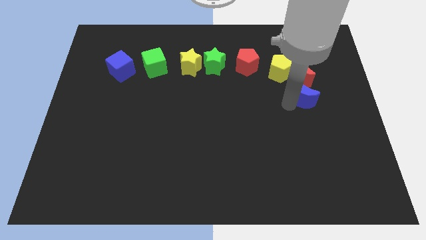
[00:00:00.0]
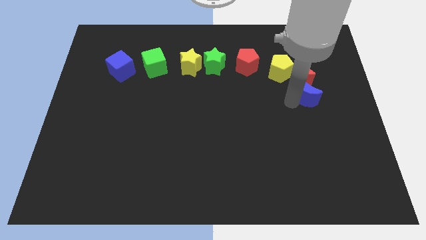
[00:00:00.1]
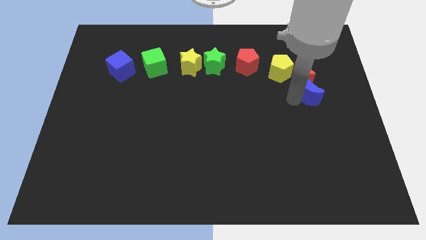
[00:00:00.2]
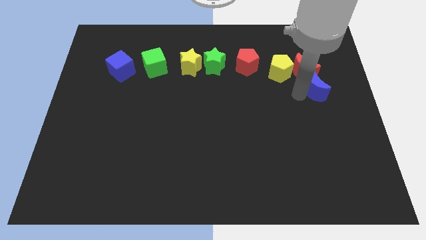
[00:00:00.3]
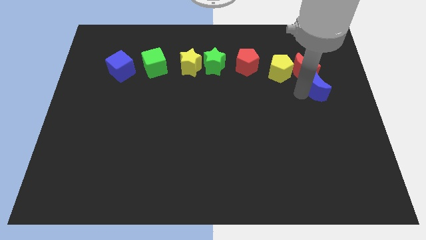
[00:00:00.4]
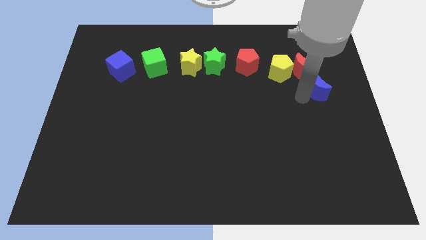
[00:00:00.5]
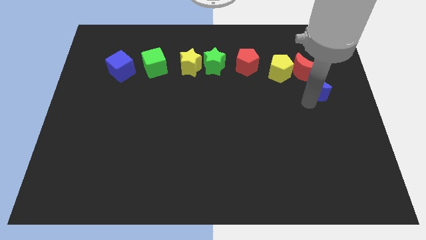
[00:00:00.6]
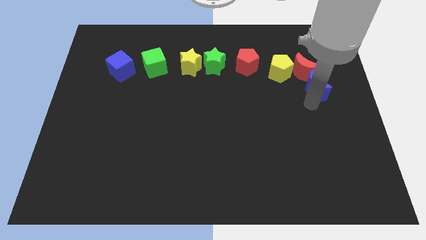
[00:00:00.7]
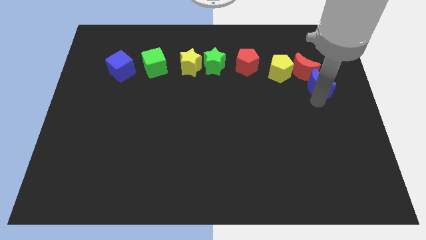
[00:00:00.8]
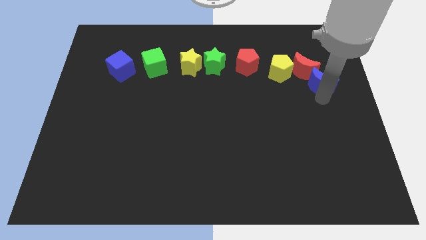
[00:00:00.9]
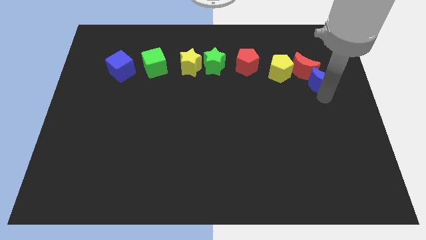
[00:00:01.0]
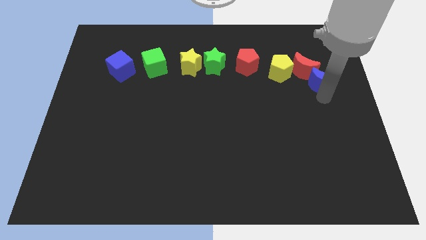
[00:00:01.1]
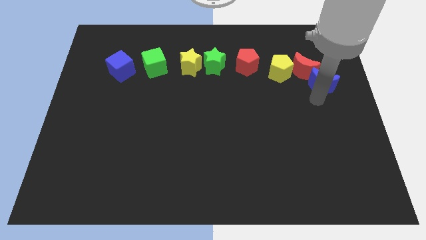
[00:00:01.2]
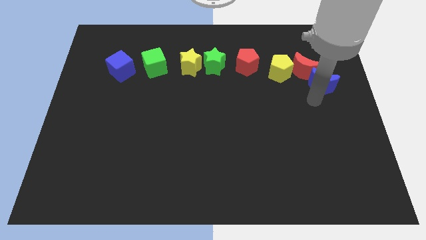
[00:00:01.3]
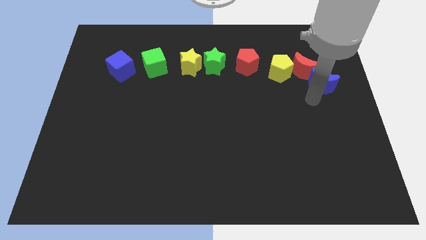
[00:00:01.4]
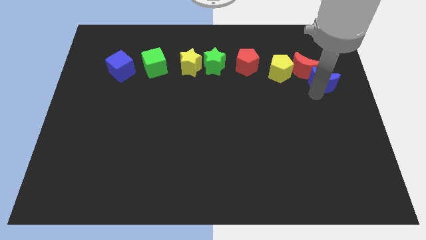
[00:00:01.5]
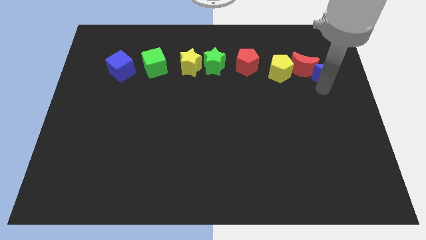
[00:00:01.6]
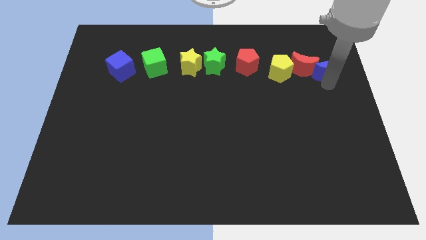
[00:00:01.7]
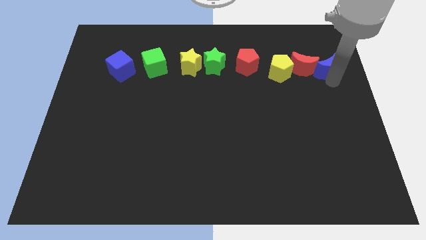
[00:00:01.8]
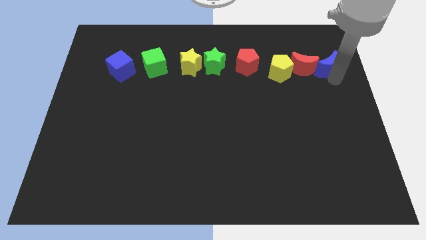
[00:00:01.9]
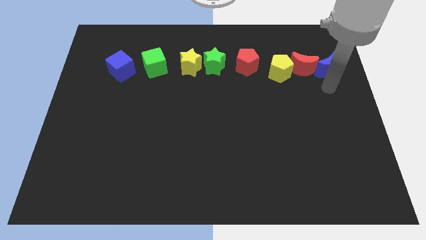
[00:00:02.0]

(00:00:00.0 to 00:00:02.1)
push the blue crescent to the right of red crescent

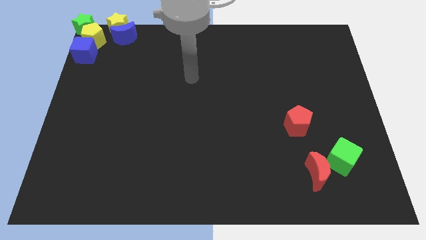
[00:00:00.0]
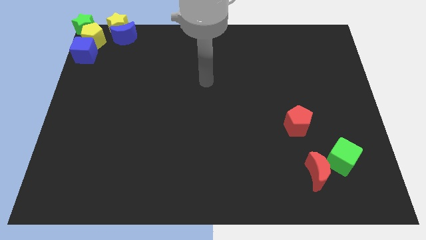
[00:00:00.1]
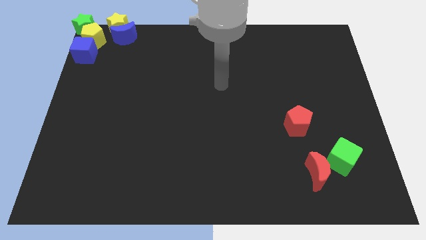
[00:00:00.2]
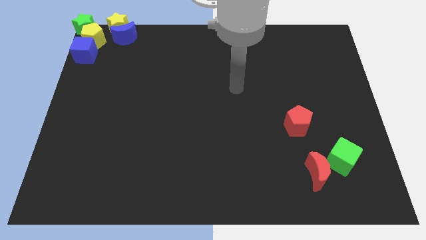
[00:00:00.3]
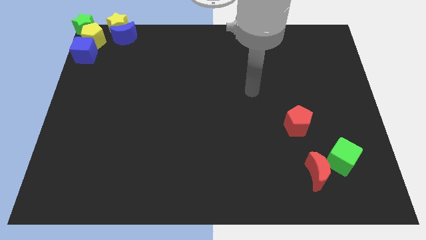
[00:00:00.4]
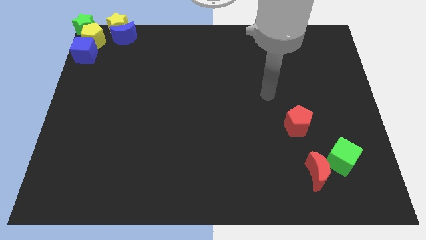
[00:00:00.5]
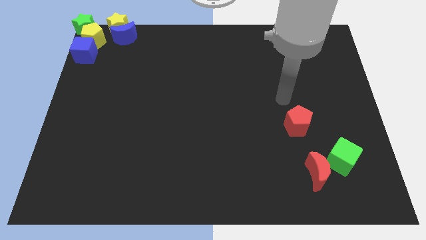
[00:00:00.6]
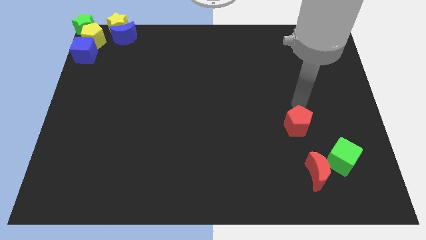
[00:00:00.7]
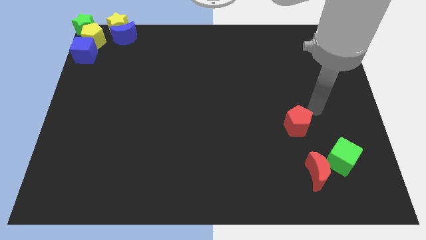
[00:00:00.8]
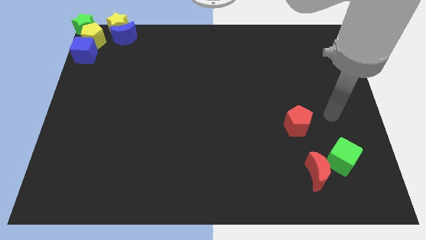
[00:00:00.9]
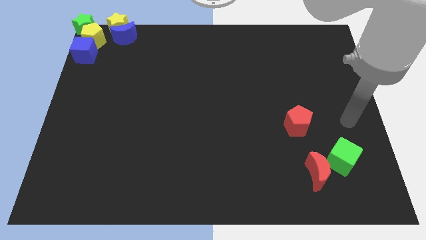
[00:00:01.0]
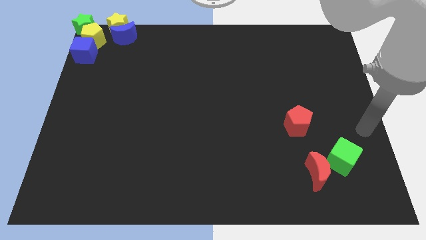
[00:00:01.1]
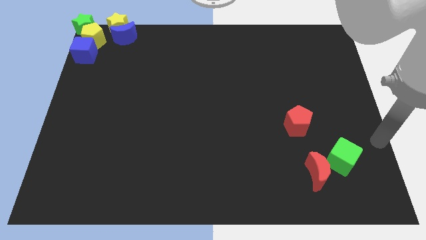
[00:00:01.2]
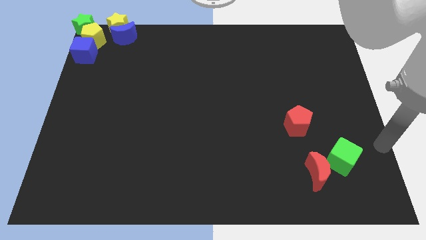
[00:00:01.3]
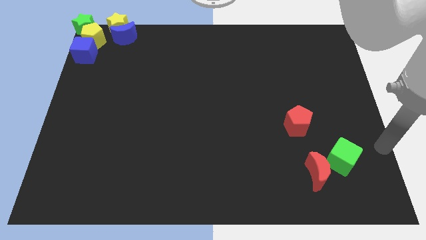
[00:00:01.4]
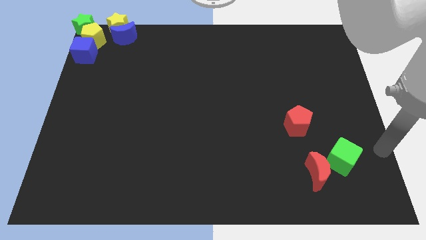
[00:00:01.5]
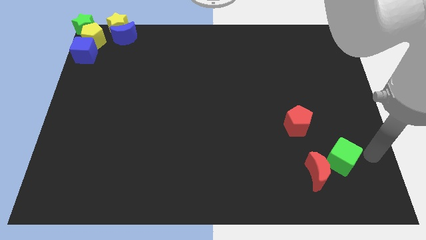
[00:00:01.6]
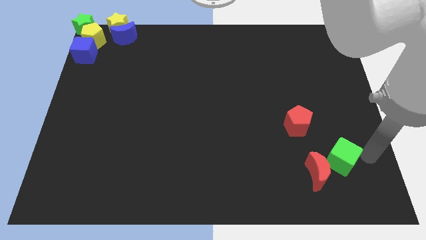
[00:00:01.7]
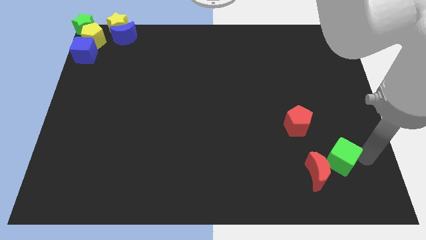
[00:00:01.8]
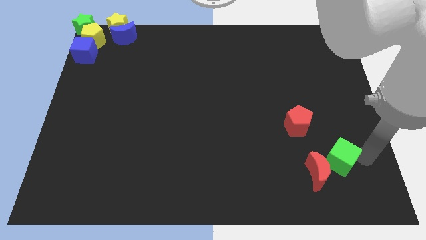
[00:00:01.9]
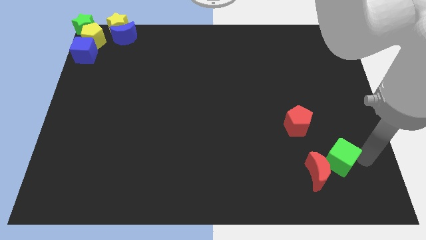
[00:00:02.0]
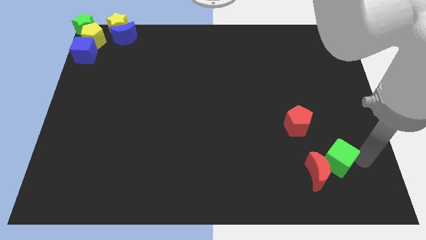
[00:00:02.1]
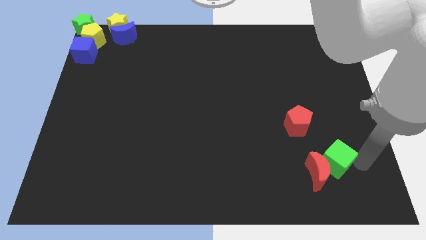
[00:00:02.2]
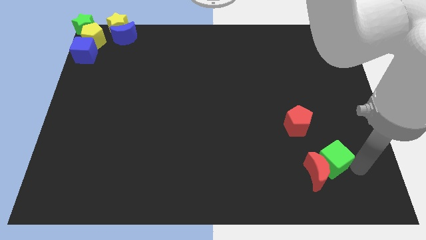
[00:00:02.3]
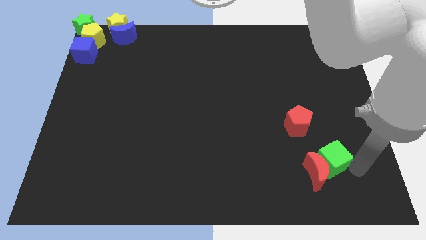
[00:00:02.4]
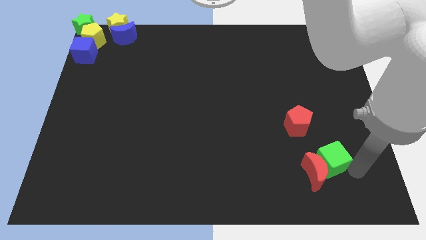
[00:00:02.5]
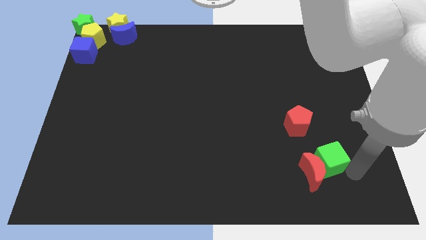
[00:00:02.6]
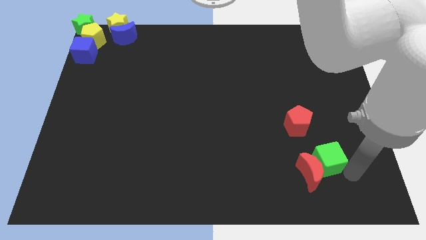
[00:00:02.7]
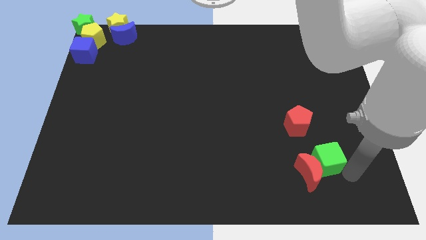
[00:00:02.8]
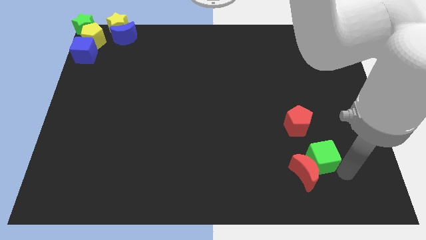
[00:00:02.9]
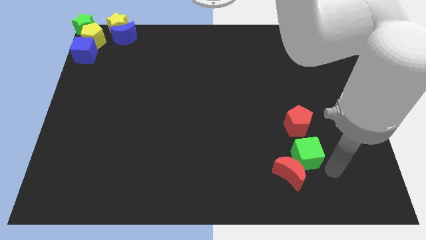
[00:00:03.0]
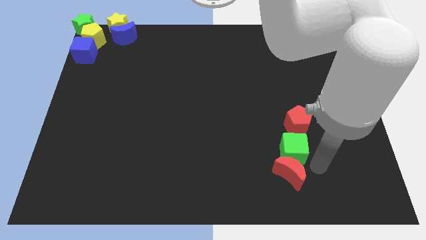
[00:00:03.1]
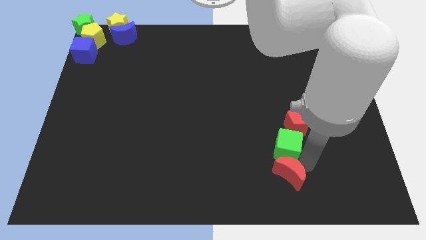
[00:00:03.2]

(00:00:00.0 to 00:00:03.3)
place green cube to the bottom of red pentagon

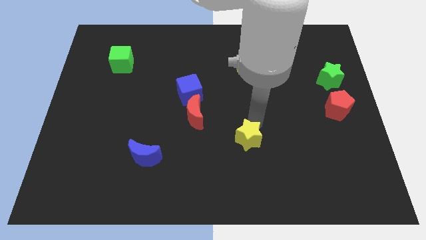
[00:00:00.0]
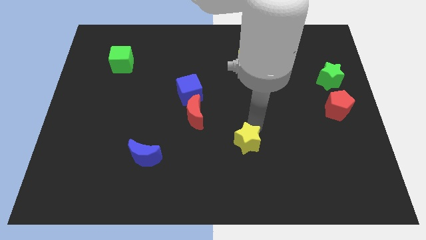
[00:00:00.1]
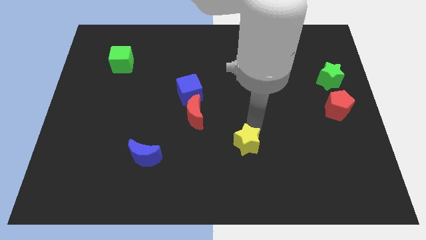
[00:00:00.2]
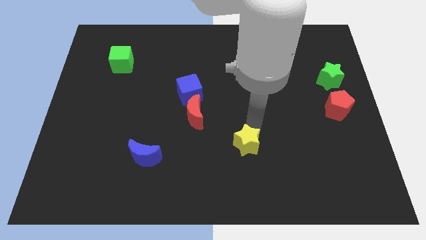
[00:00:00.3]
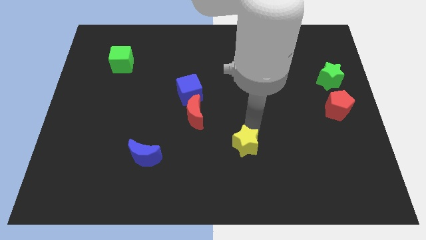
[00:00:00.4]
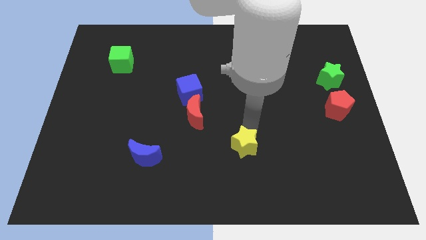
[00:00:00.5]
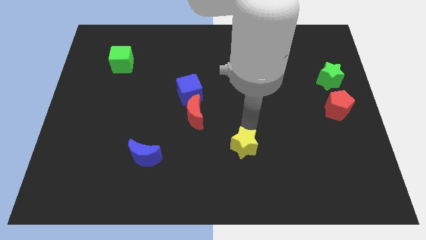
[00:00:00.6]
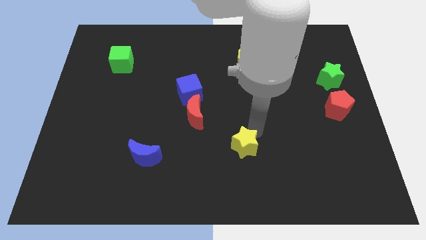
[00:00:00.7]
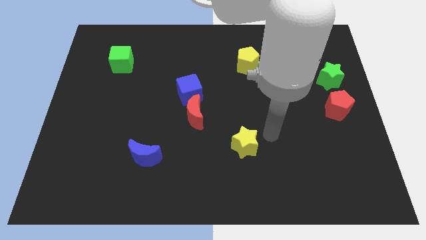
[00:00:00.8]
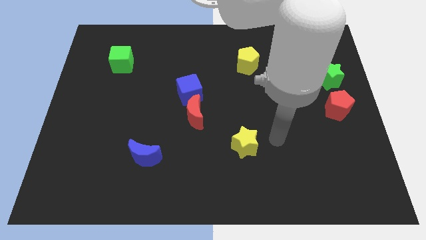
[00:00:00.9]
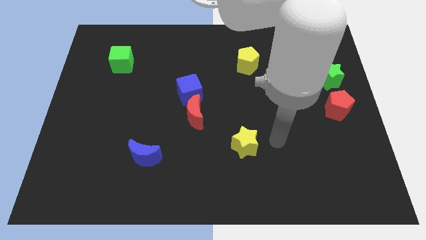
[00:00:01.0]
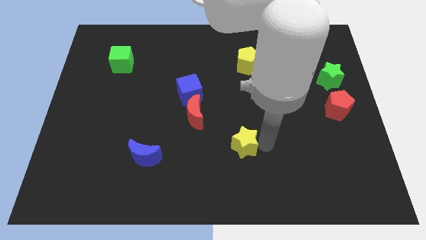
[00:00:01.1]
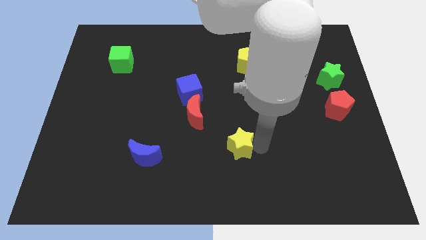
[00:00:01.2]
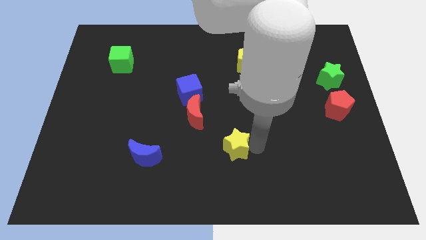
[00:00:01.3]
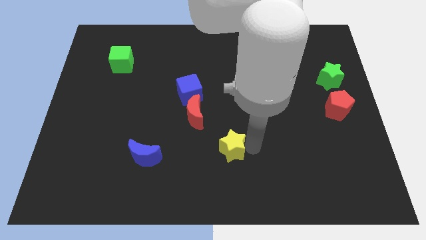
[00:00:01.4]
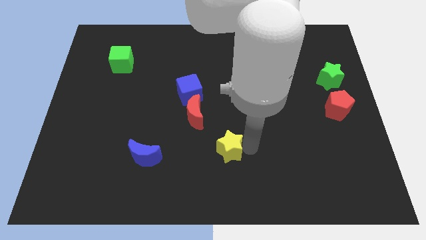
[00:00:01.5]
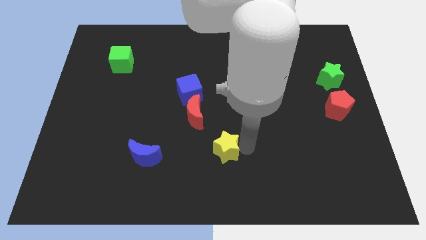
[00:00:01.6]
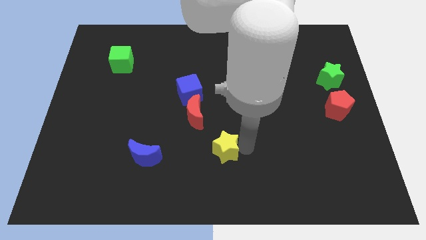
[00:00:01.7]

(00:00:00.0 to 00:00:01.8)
slide the yellow star towards right of blue moon

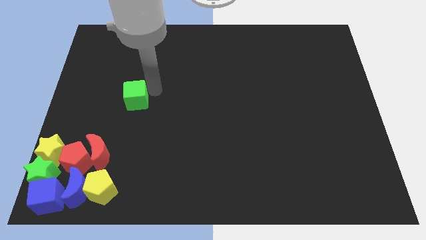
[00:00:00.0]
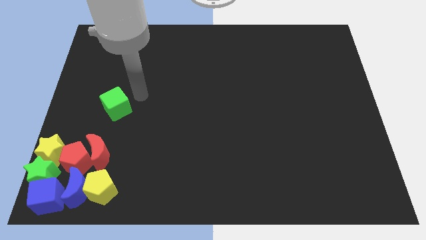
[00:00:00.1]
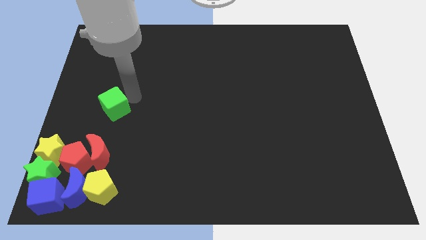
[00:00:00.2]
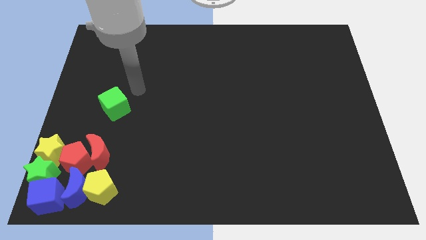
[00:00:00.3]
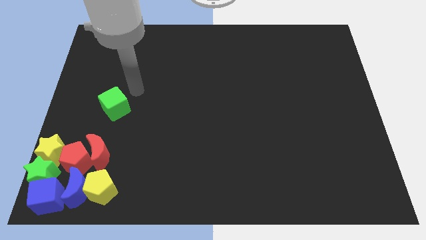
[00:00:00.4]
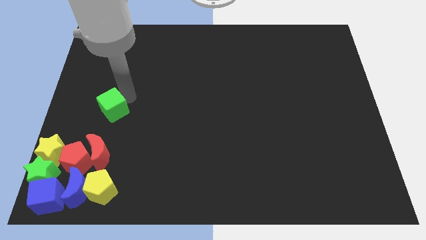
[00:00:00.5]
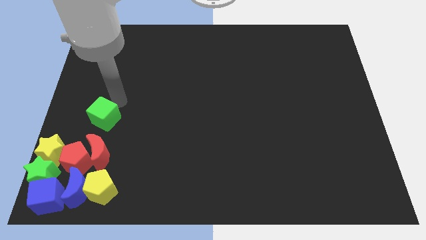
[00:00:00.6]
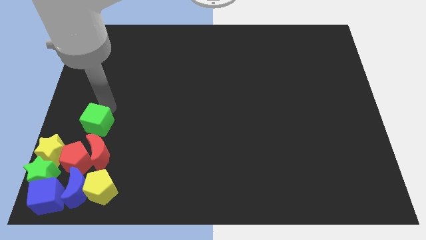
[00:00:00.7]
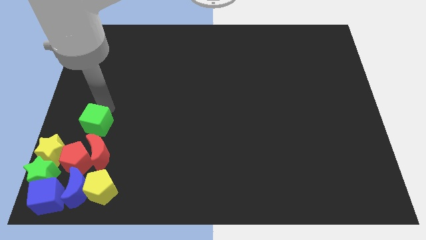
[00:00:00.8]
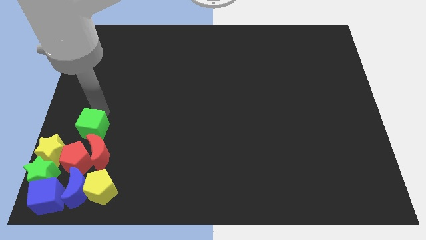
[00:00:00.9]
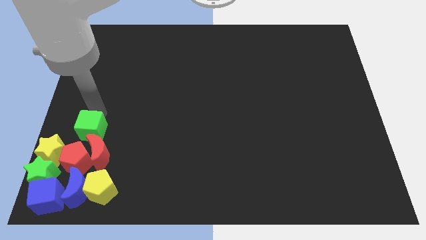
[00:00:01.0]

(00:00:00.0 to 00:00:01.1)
place green star above red crescent

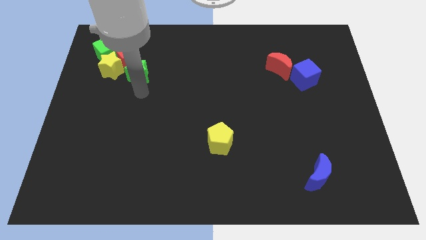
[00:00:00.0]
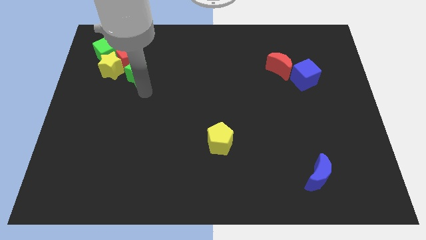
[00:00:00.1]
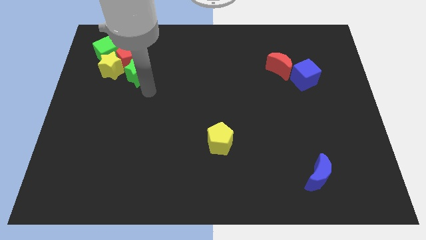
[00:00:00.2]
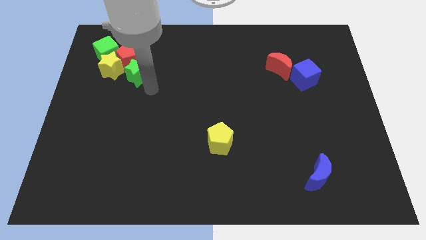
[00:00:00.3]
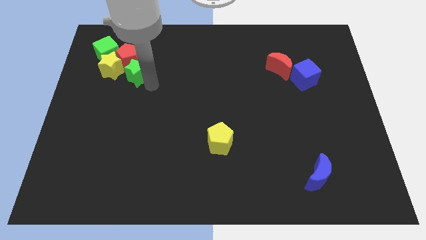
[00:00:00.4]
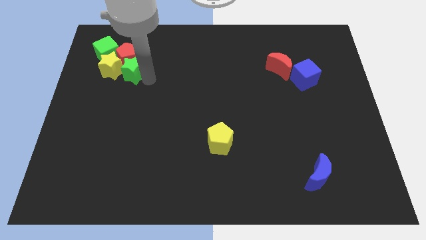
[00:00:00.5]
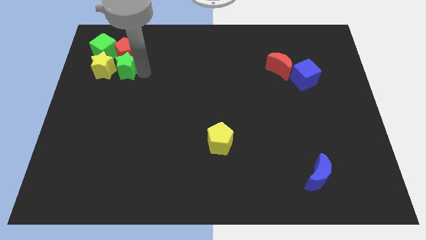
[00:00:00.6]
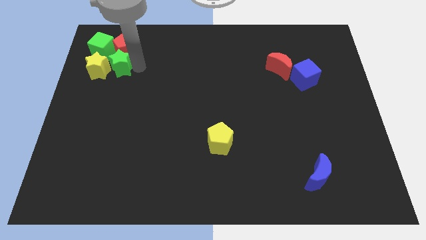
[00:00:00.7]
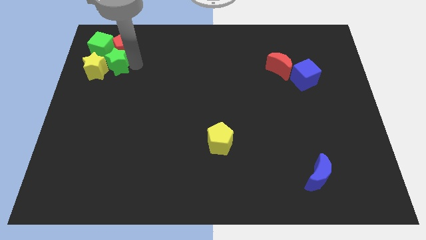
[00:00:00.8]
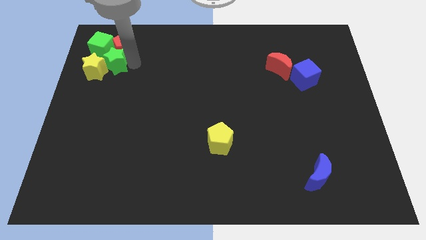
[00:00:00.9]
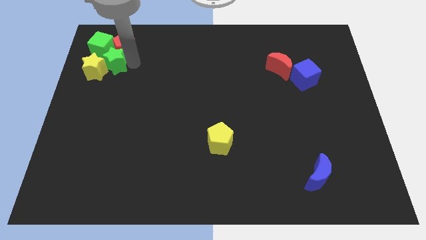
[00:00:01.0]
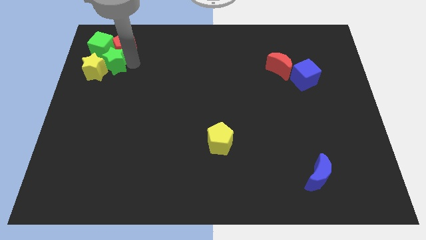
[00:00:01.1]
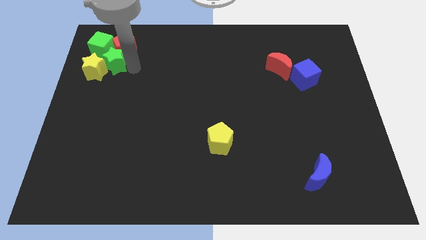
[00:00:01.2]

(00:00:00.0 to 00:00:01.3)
push the green star into green cube
